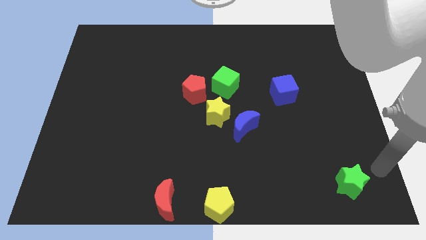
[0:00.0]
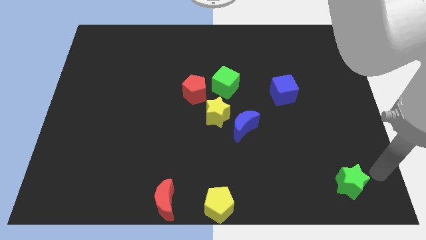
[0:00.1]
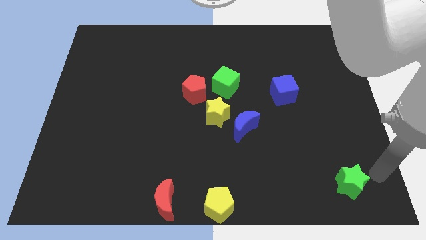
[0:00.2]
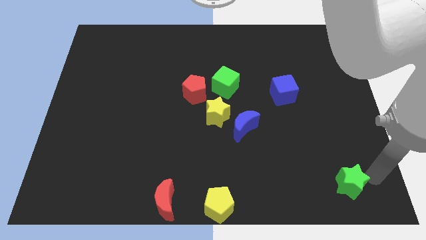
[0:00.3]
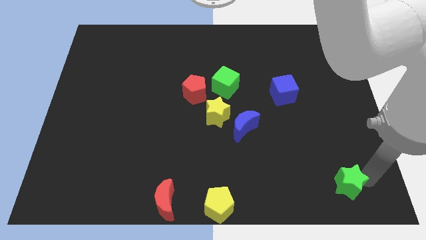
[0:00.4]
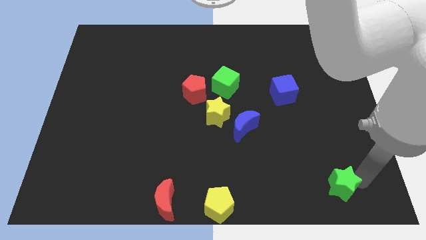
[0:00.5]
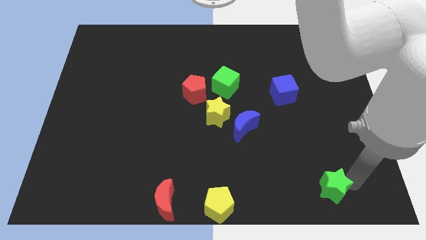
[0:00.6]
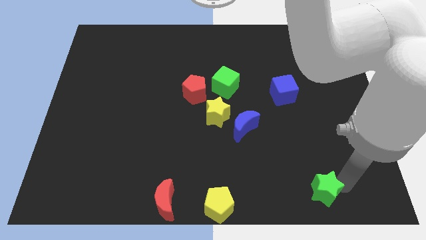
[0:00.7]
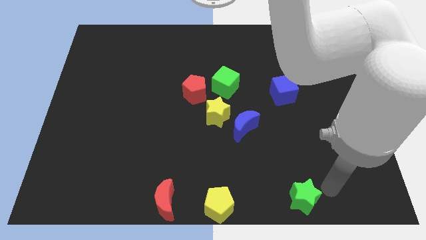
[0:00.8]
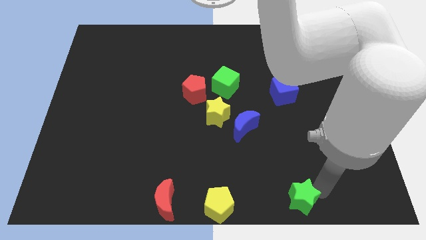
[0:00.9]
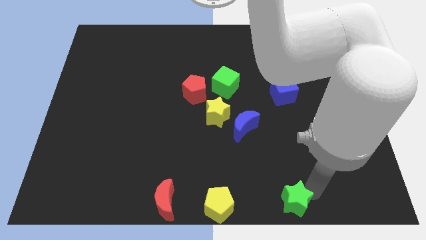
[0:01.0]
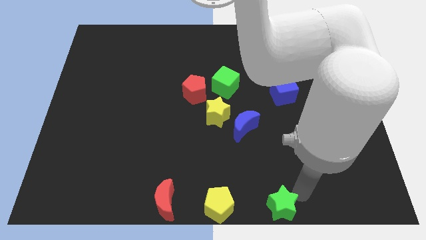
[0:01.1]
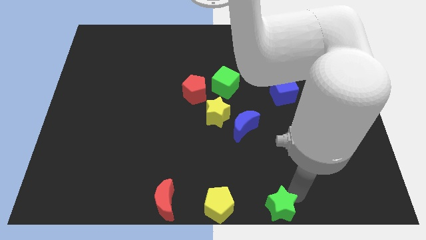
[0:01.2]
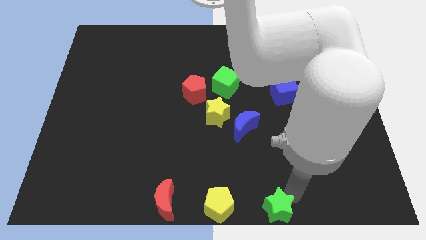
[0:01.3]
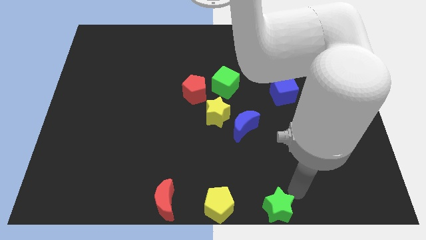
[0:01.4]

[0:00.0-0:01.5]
place the green star in the bottom center

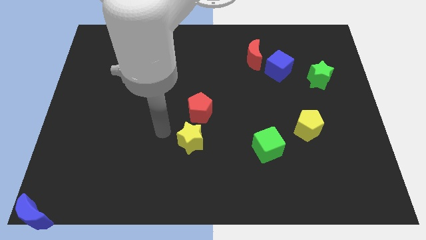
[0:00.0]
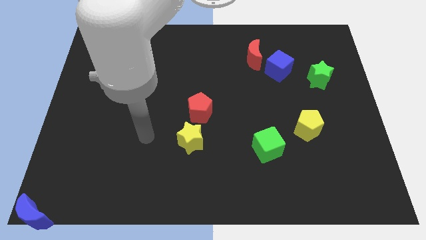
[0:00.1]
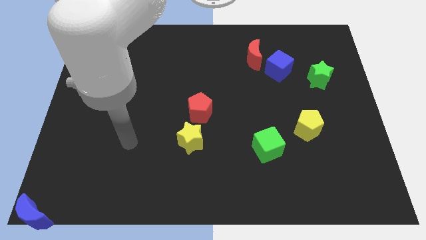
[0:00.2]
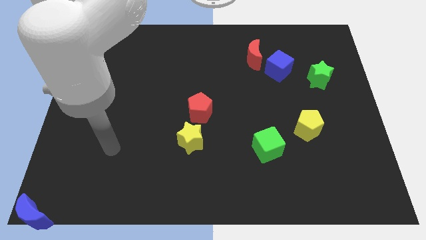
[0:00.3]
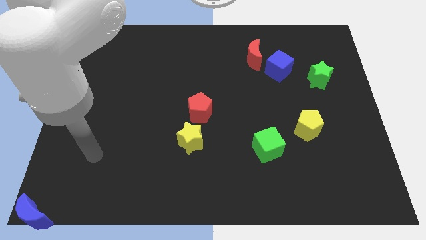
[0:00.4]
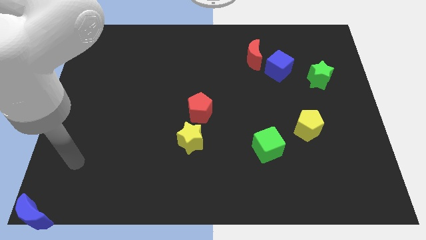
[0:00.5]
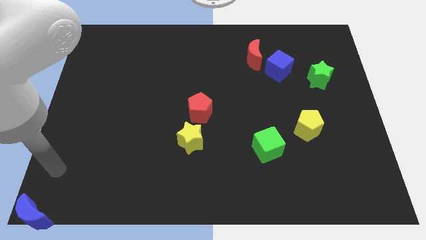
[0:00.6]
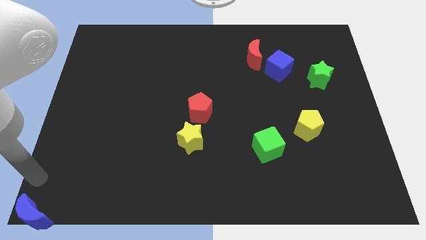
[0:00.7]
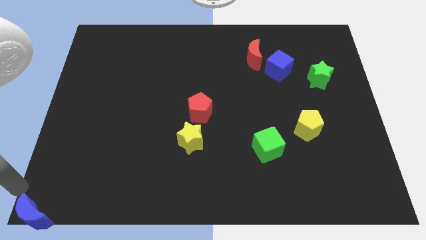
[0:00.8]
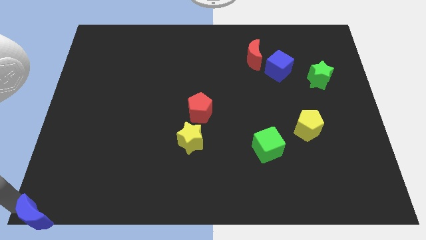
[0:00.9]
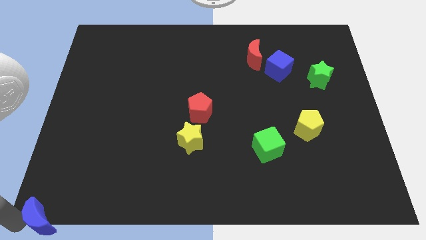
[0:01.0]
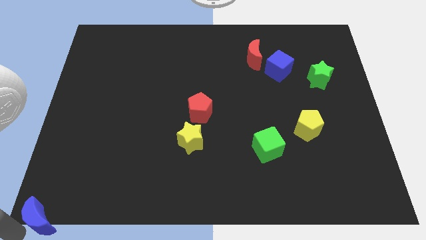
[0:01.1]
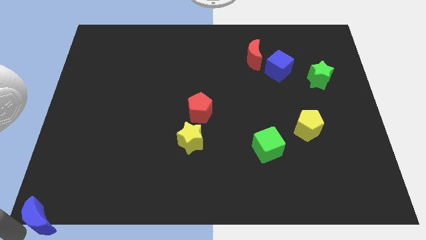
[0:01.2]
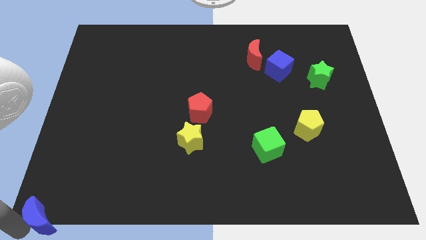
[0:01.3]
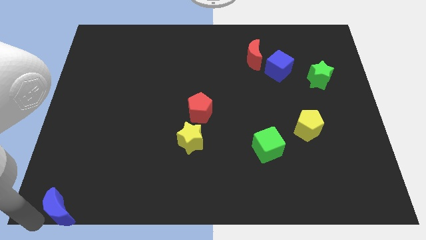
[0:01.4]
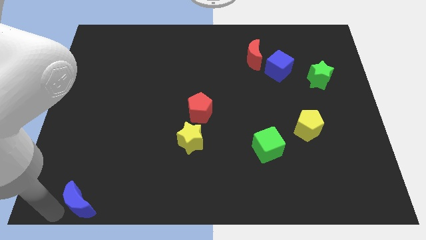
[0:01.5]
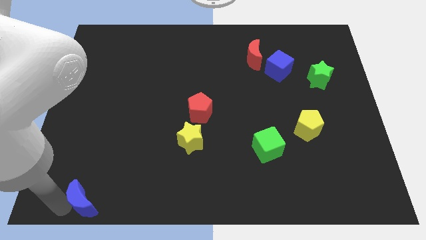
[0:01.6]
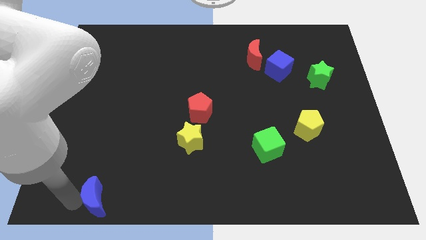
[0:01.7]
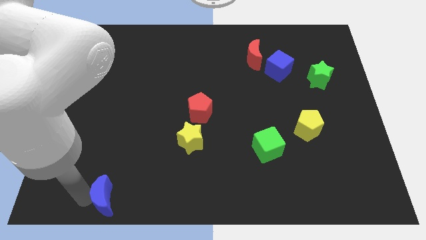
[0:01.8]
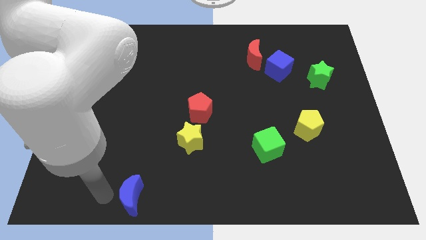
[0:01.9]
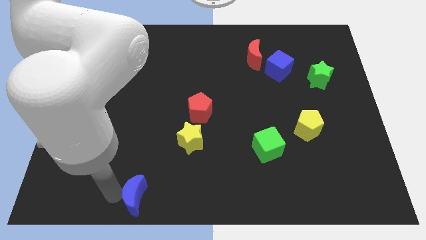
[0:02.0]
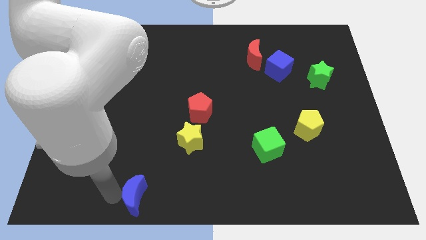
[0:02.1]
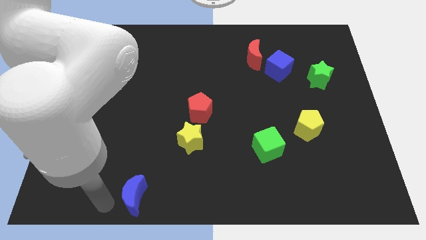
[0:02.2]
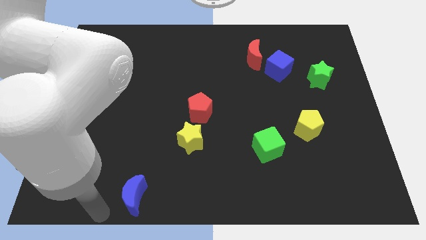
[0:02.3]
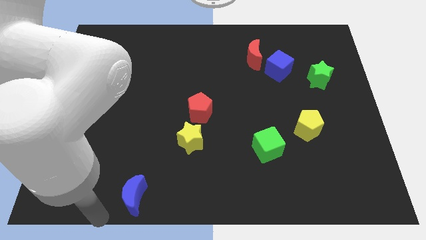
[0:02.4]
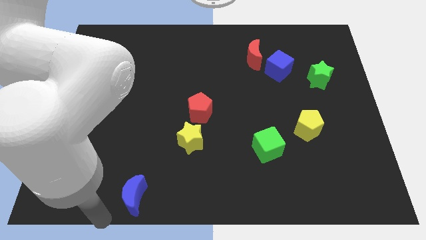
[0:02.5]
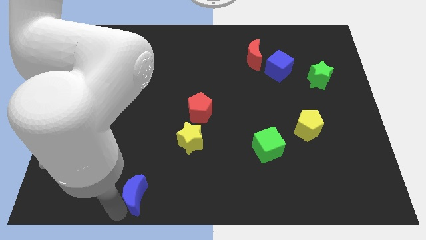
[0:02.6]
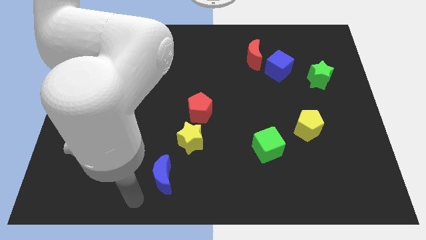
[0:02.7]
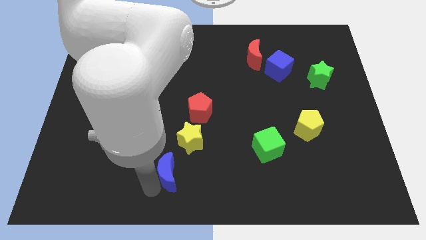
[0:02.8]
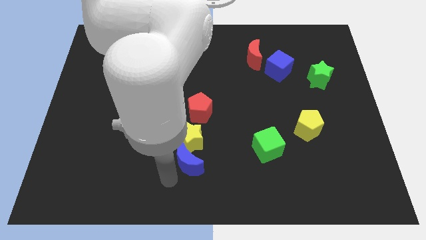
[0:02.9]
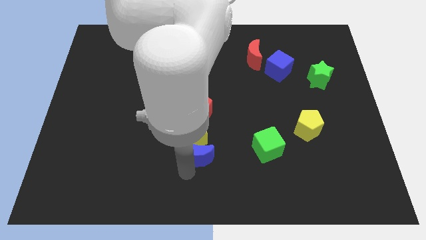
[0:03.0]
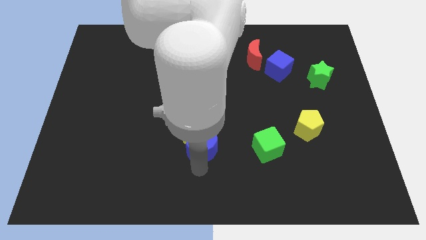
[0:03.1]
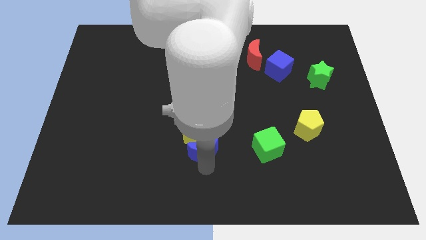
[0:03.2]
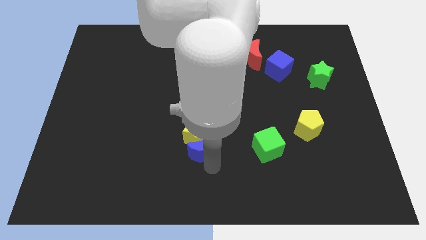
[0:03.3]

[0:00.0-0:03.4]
place the blue crescent below the yellow star

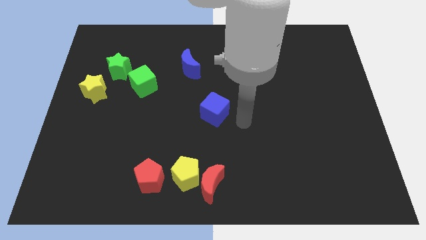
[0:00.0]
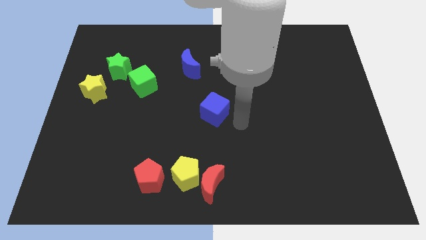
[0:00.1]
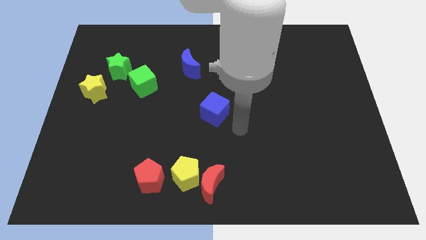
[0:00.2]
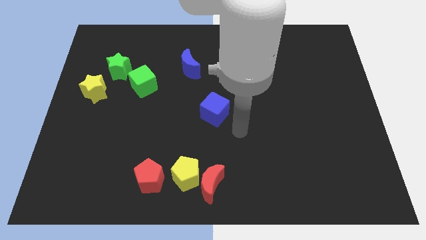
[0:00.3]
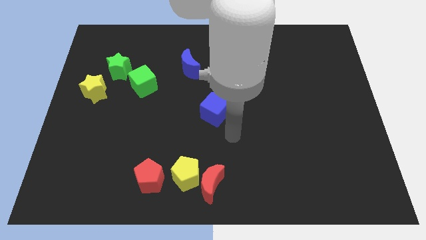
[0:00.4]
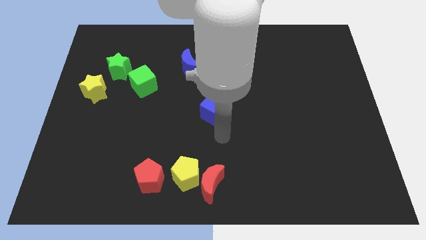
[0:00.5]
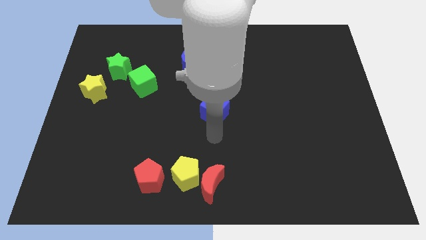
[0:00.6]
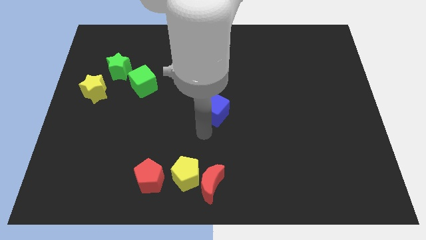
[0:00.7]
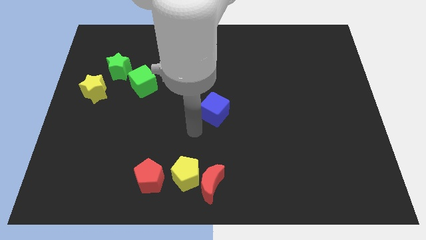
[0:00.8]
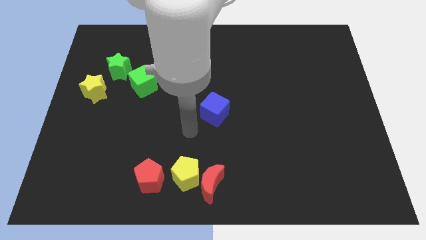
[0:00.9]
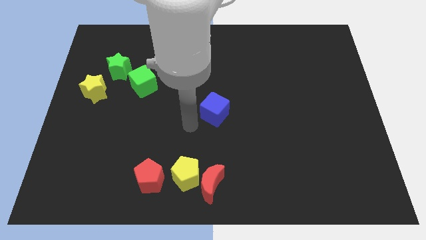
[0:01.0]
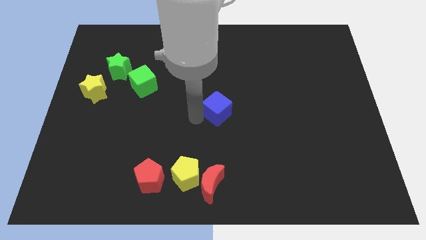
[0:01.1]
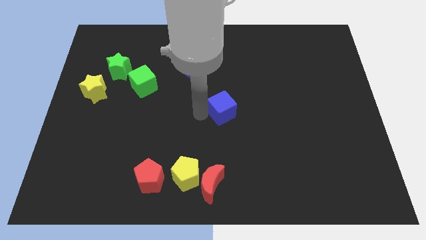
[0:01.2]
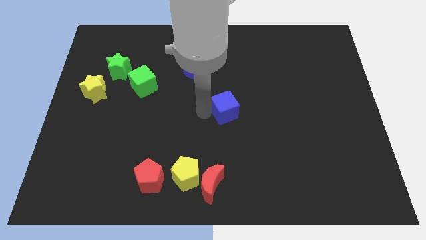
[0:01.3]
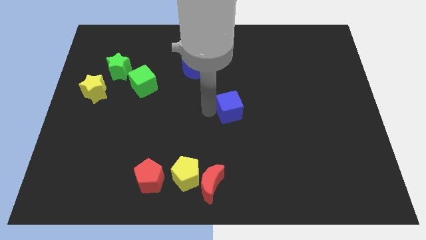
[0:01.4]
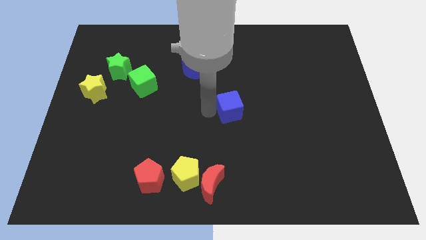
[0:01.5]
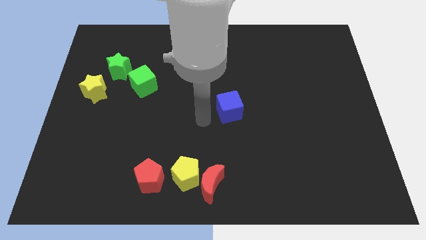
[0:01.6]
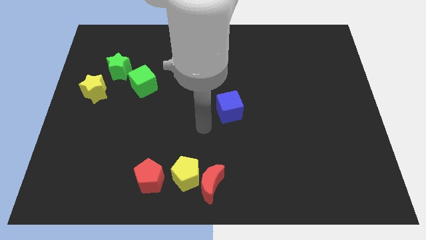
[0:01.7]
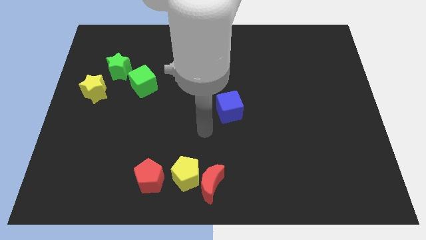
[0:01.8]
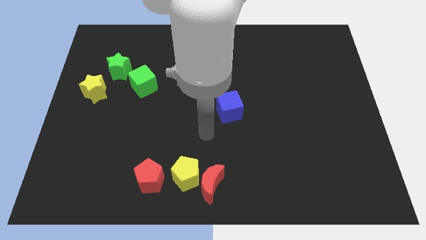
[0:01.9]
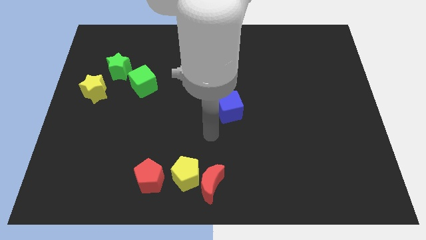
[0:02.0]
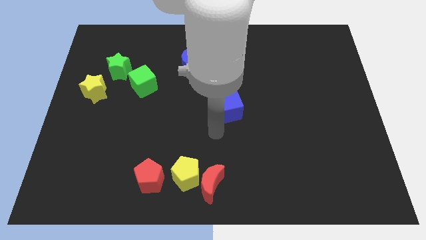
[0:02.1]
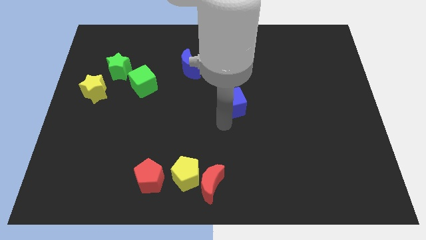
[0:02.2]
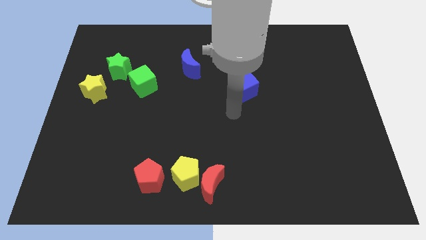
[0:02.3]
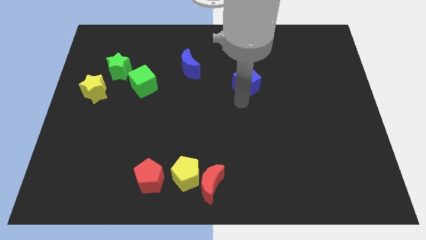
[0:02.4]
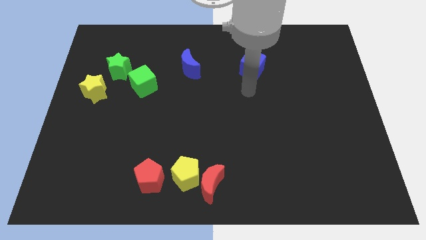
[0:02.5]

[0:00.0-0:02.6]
push the blue cube diagonally upwards

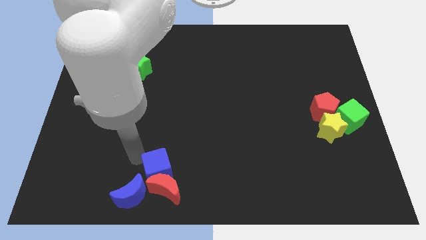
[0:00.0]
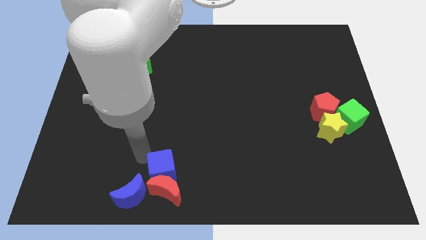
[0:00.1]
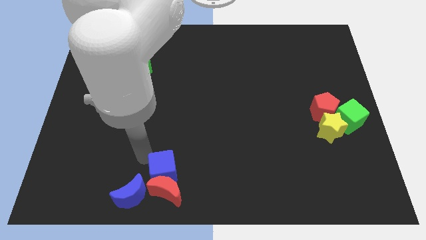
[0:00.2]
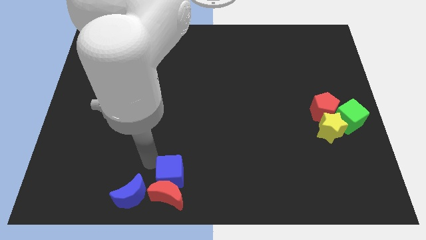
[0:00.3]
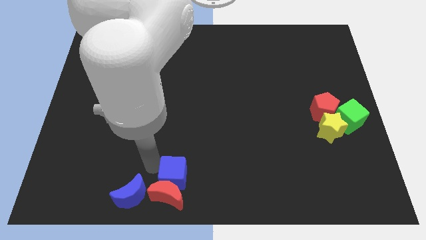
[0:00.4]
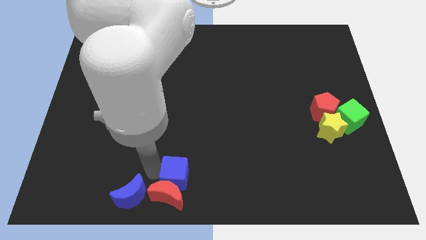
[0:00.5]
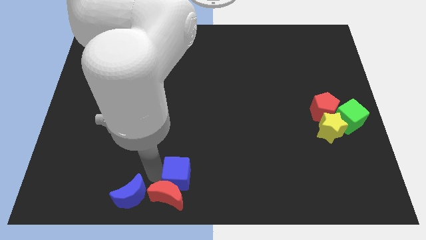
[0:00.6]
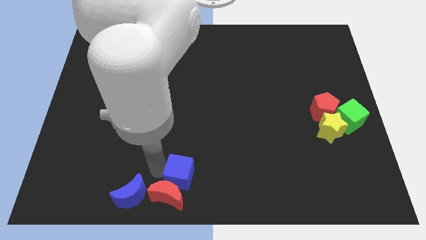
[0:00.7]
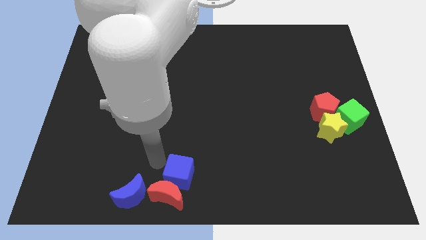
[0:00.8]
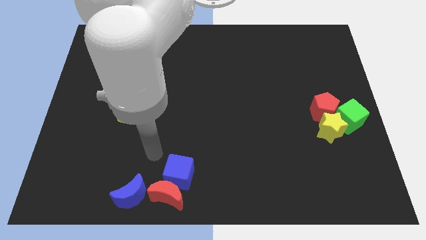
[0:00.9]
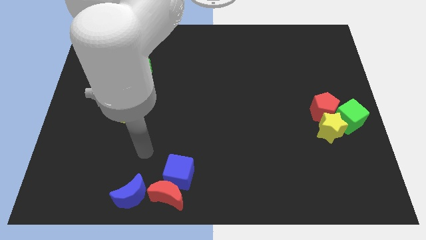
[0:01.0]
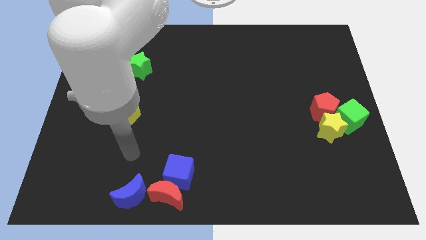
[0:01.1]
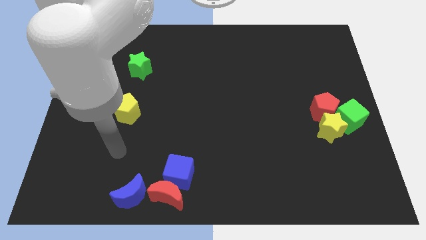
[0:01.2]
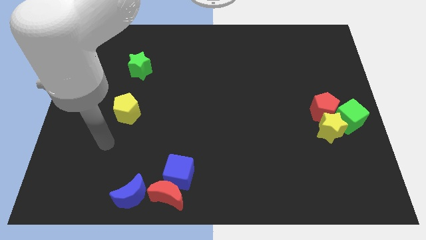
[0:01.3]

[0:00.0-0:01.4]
place blue cube to the top right of the red moon
